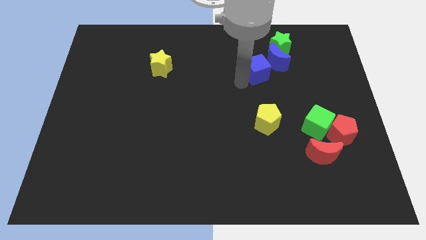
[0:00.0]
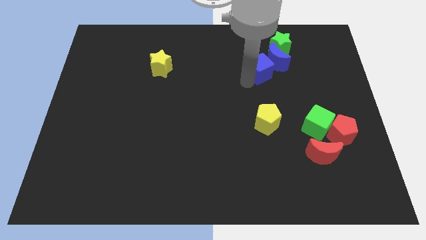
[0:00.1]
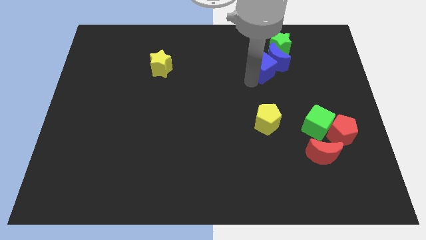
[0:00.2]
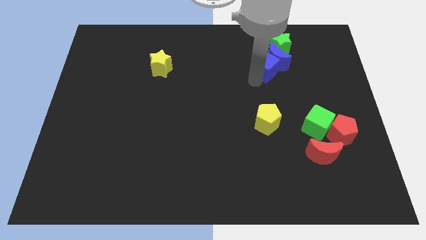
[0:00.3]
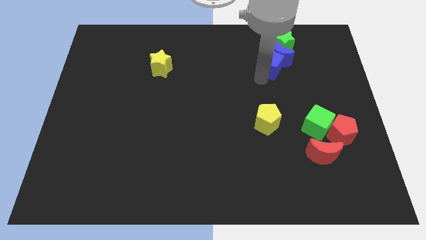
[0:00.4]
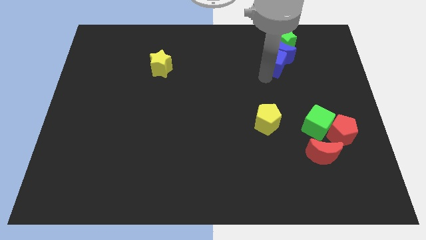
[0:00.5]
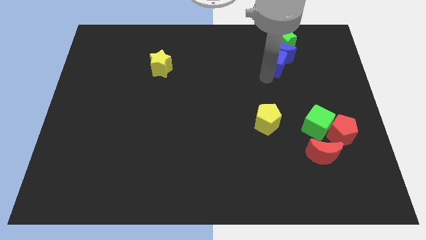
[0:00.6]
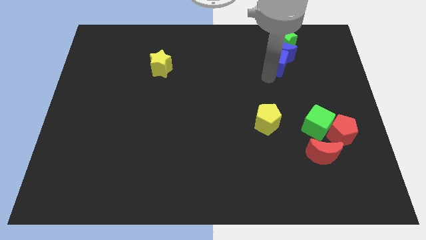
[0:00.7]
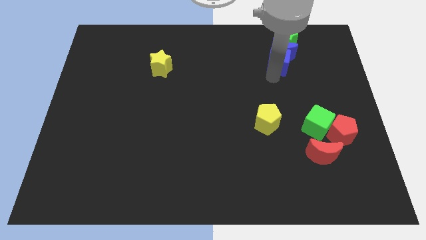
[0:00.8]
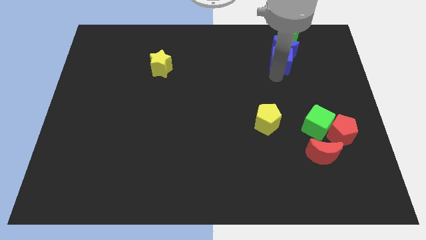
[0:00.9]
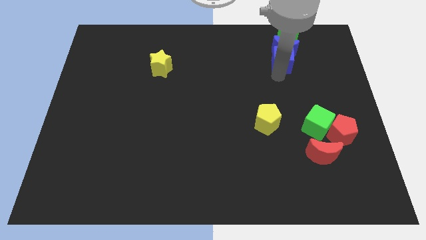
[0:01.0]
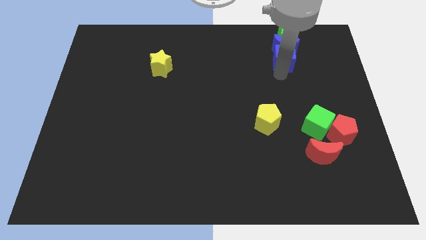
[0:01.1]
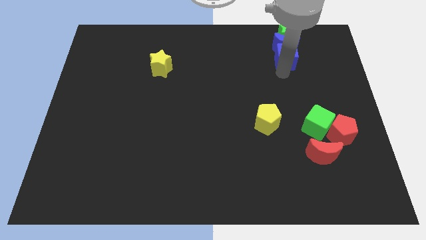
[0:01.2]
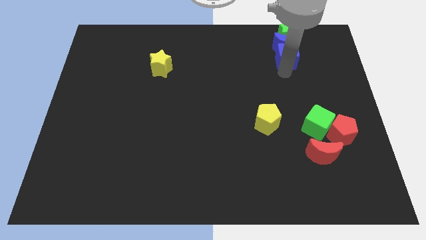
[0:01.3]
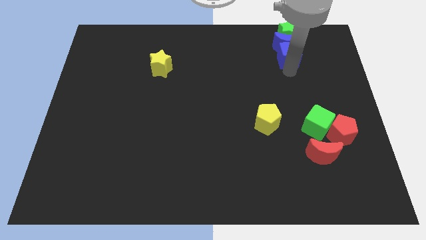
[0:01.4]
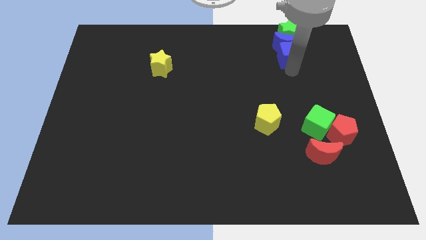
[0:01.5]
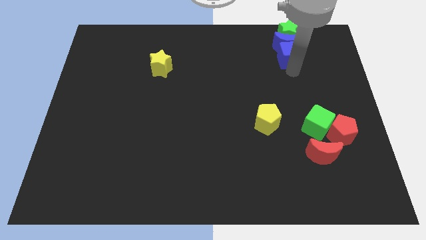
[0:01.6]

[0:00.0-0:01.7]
move the blue cube into the blue moon

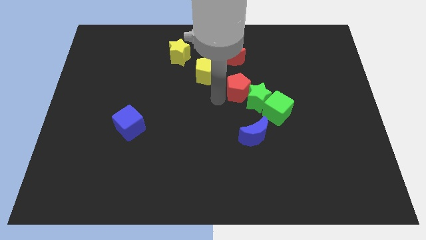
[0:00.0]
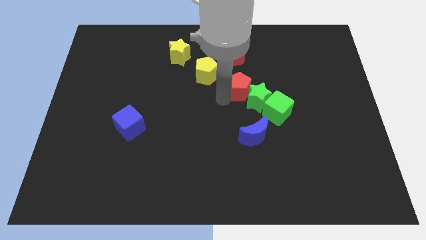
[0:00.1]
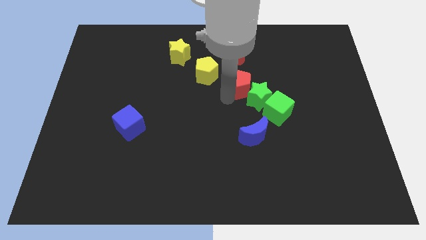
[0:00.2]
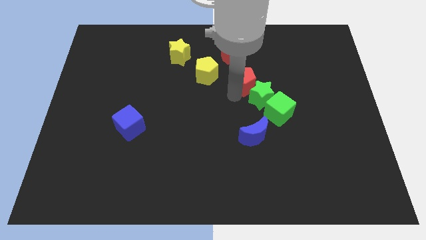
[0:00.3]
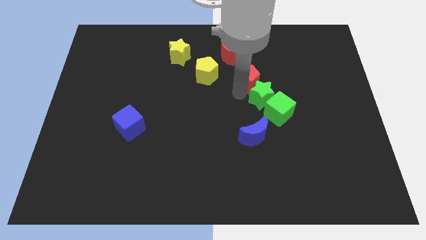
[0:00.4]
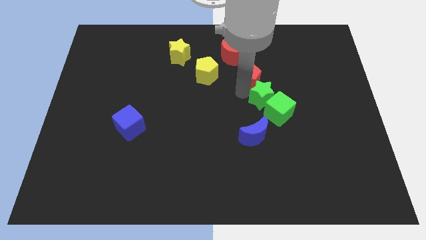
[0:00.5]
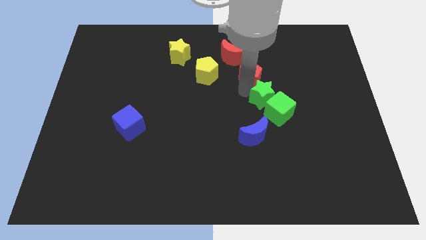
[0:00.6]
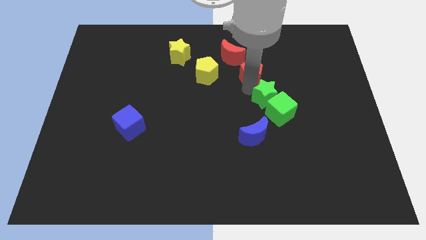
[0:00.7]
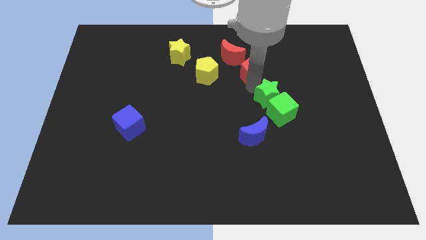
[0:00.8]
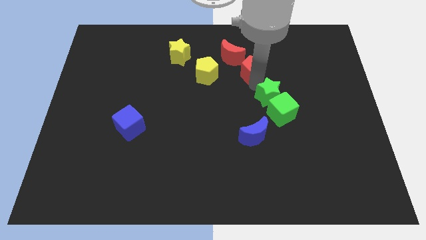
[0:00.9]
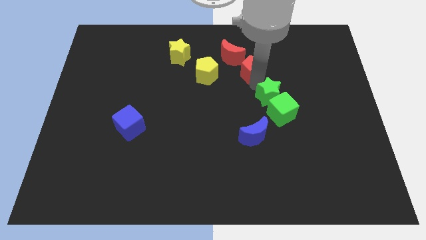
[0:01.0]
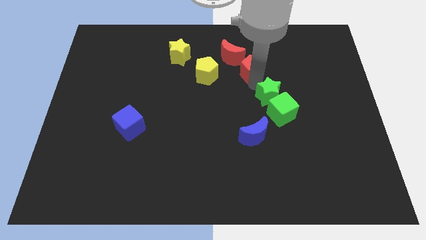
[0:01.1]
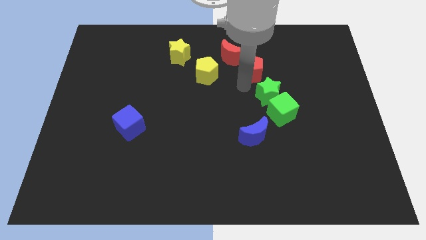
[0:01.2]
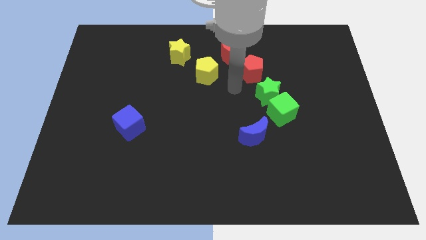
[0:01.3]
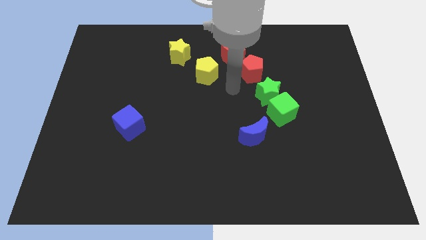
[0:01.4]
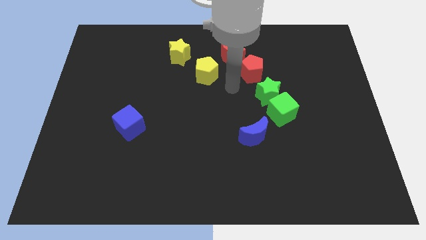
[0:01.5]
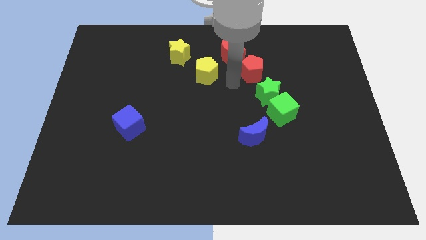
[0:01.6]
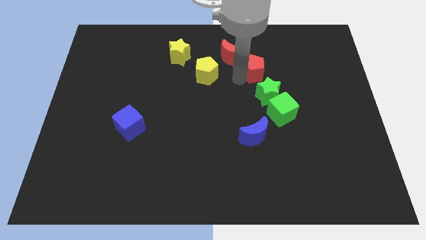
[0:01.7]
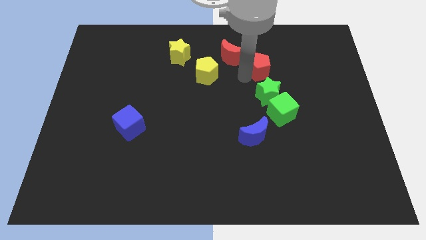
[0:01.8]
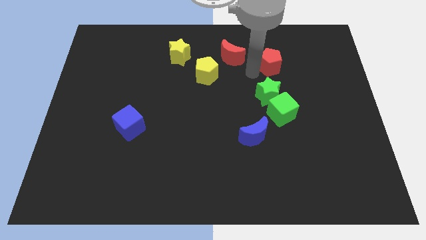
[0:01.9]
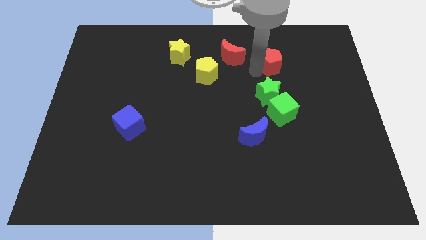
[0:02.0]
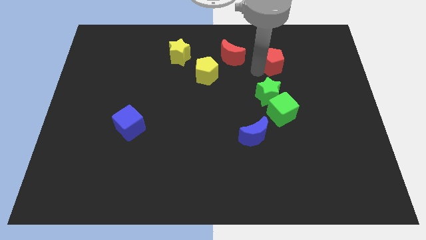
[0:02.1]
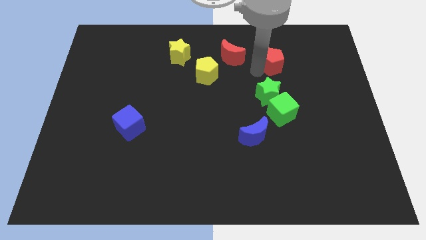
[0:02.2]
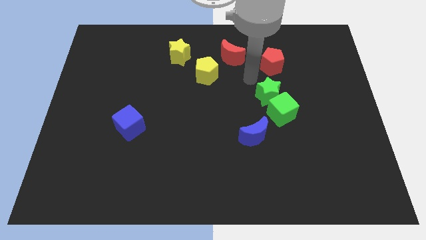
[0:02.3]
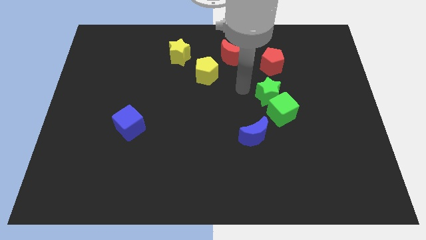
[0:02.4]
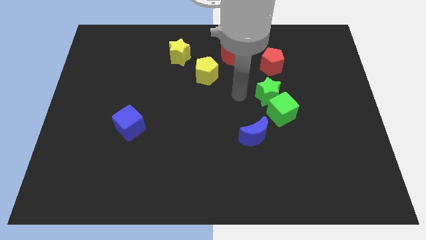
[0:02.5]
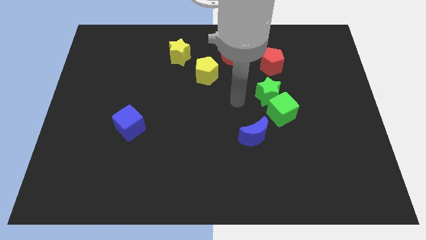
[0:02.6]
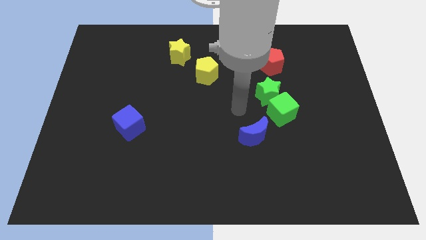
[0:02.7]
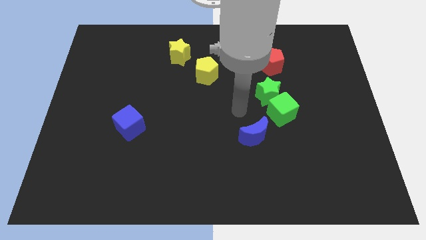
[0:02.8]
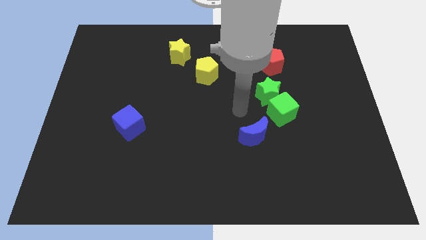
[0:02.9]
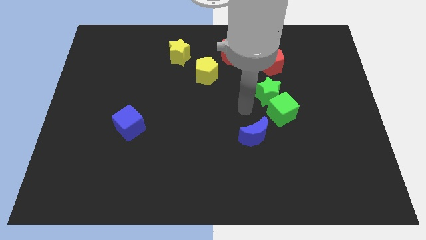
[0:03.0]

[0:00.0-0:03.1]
move the red pentagon to the right of the red crescent

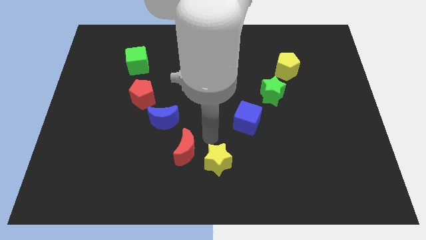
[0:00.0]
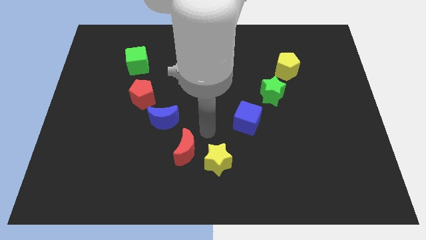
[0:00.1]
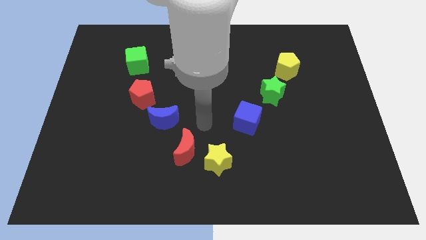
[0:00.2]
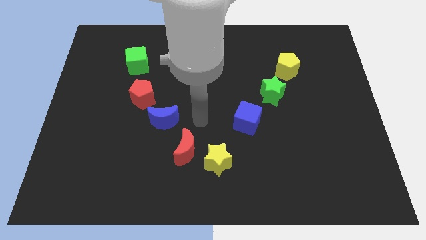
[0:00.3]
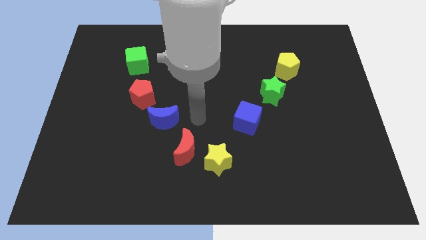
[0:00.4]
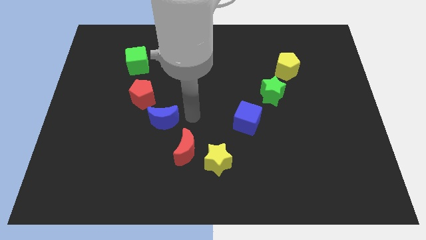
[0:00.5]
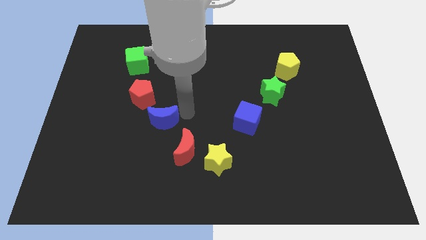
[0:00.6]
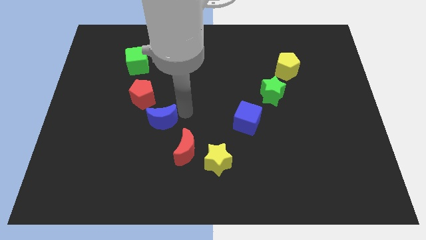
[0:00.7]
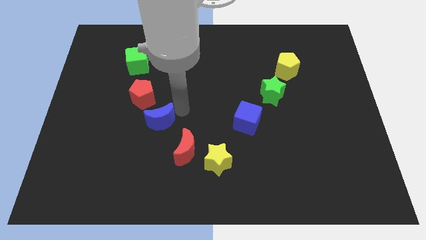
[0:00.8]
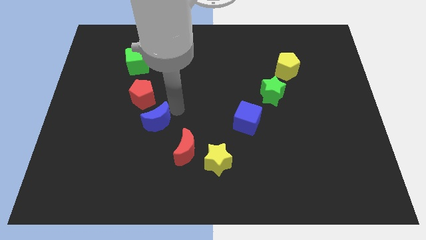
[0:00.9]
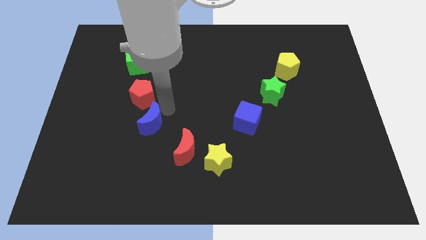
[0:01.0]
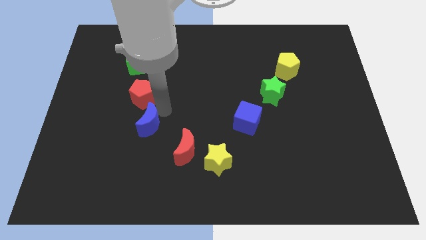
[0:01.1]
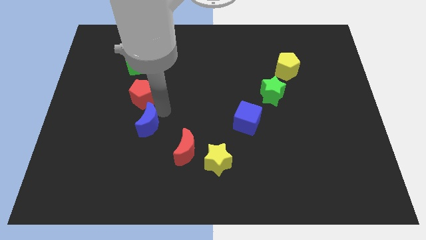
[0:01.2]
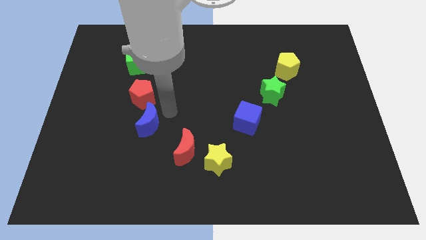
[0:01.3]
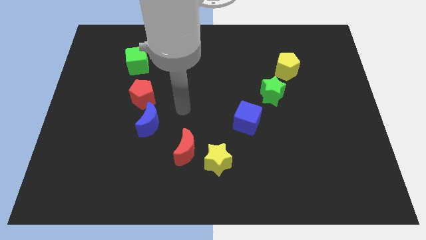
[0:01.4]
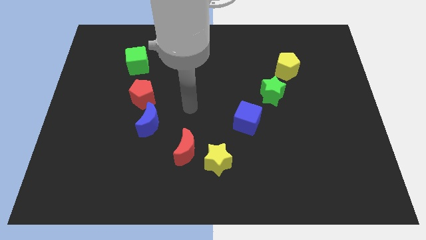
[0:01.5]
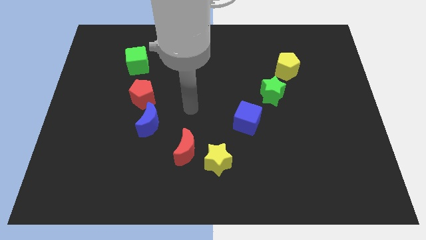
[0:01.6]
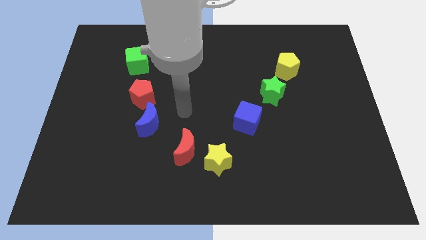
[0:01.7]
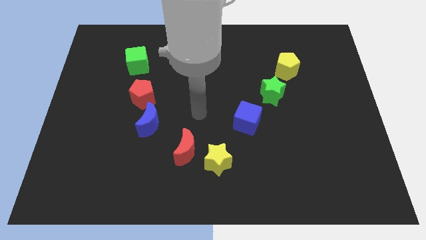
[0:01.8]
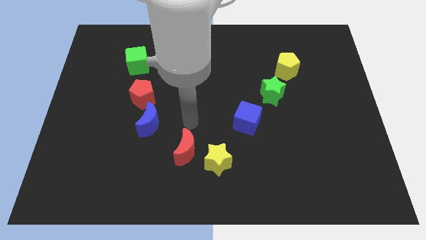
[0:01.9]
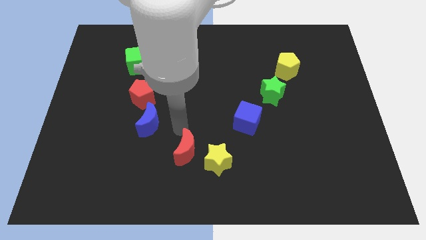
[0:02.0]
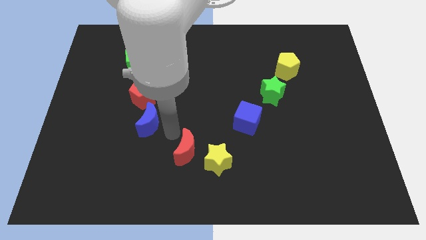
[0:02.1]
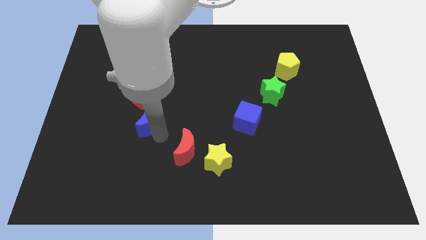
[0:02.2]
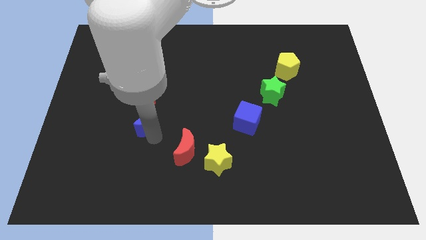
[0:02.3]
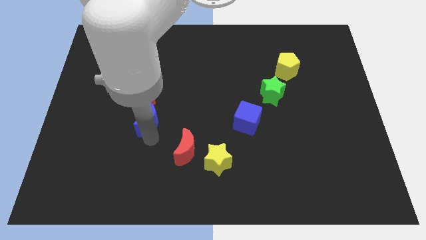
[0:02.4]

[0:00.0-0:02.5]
move blue moon towards center left

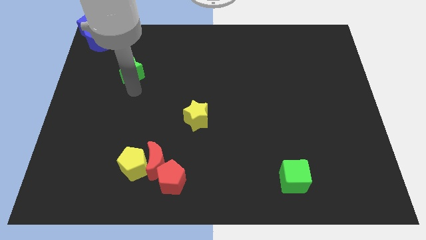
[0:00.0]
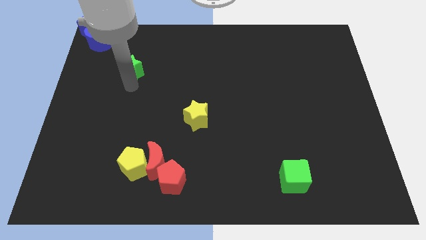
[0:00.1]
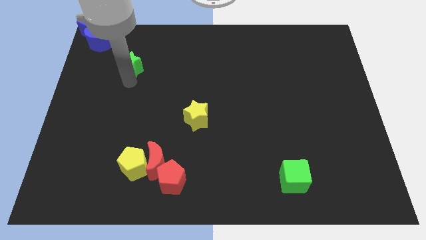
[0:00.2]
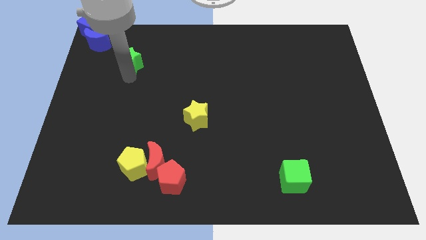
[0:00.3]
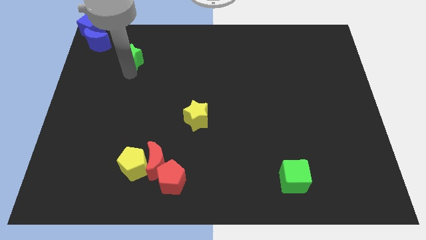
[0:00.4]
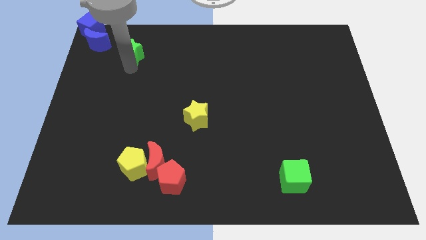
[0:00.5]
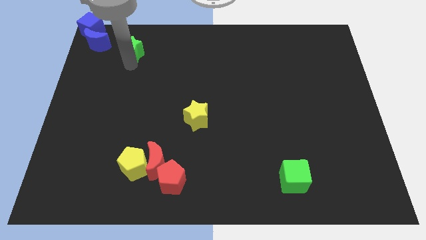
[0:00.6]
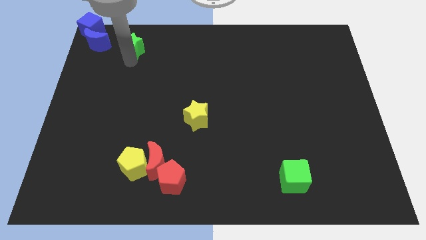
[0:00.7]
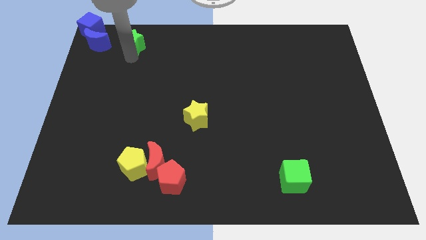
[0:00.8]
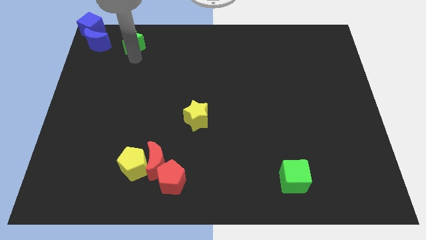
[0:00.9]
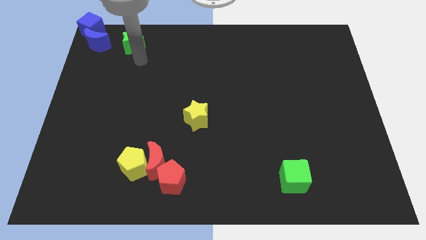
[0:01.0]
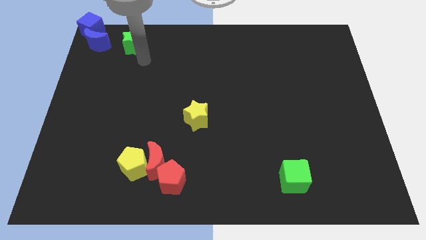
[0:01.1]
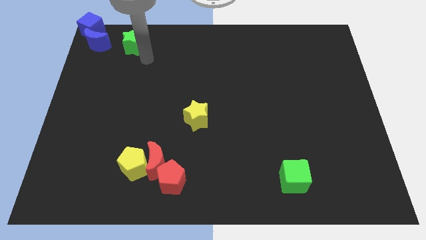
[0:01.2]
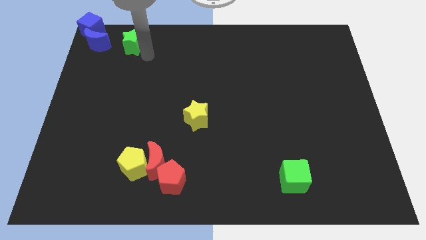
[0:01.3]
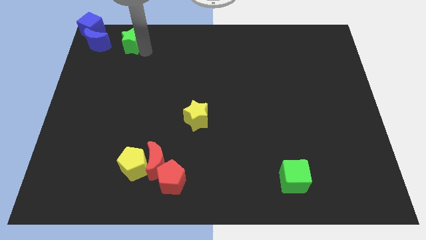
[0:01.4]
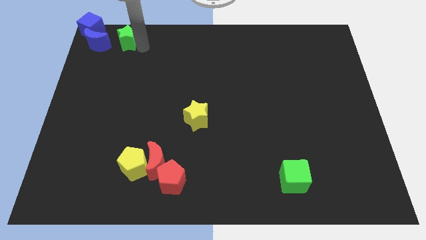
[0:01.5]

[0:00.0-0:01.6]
place the green star right to the blue moon

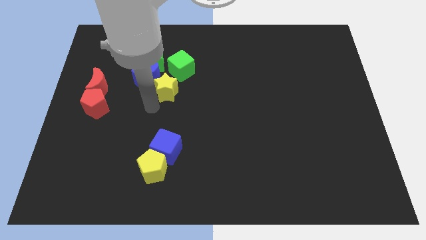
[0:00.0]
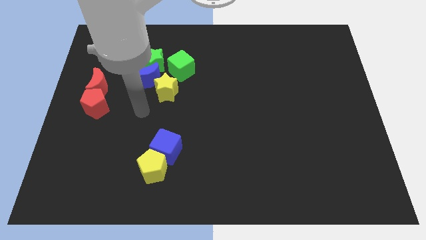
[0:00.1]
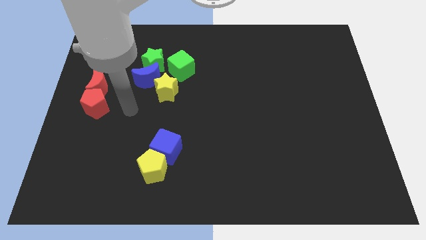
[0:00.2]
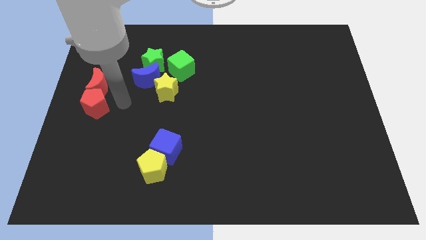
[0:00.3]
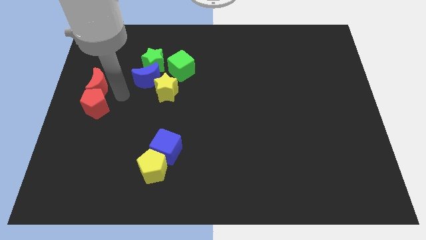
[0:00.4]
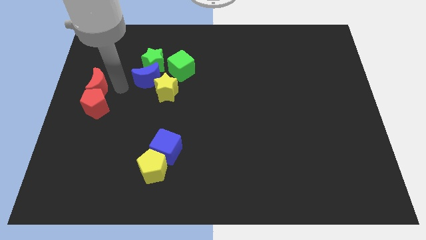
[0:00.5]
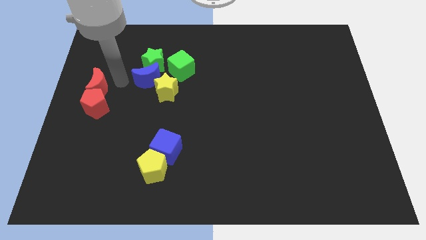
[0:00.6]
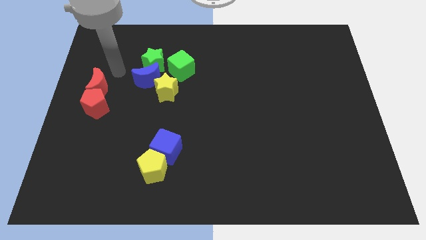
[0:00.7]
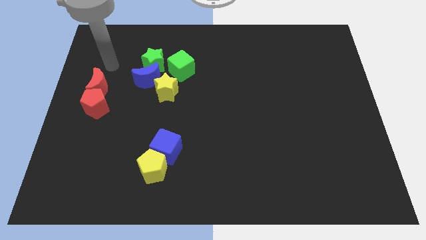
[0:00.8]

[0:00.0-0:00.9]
move the arm away from the yellow star
